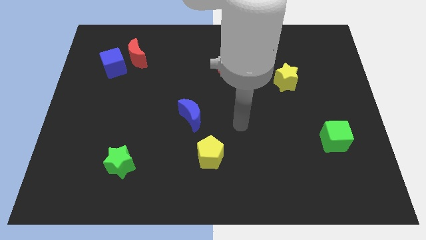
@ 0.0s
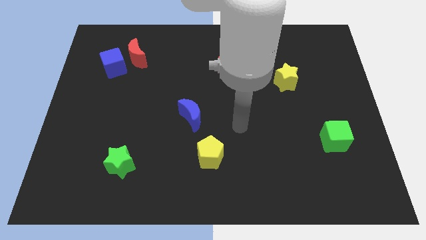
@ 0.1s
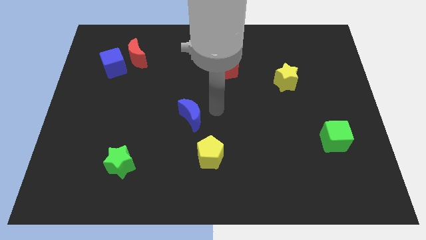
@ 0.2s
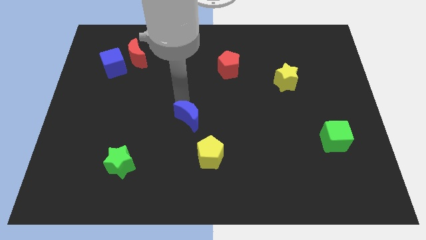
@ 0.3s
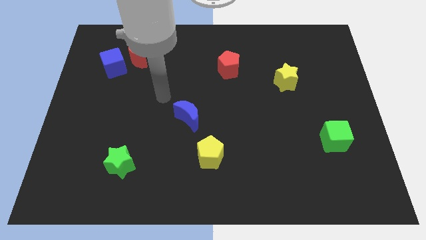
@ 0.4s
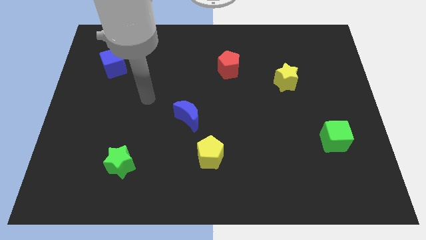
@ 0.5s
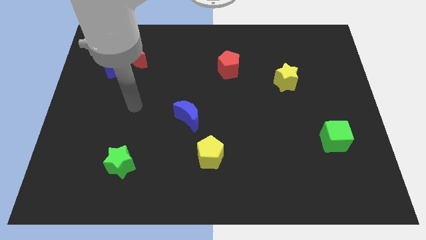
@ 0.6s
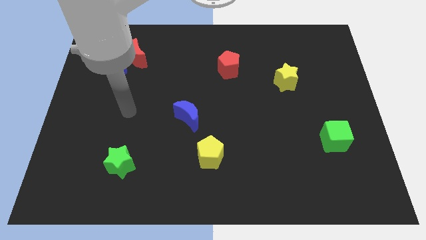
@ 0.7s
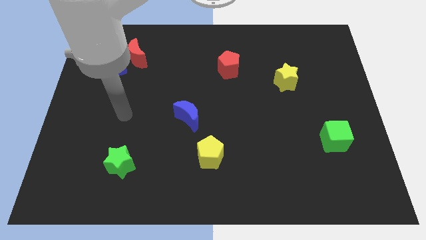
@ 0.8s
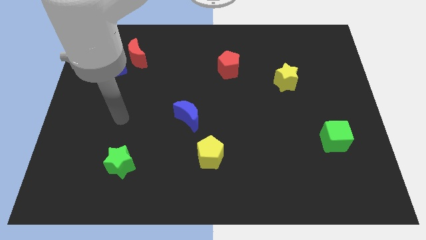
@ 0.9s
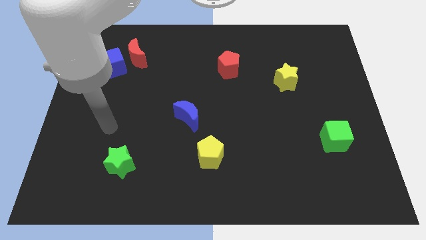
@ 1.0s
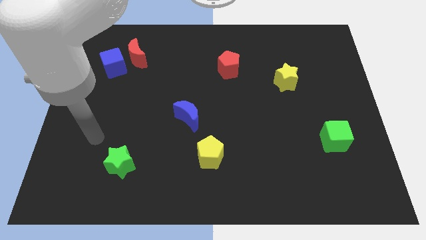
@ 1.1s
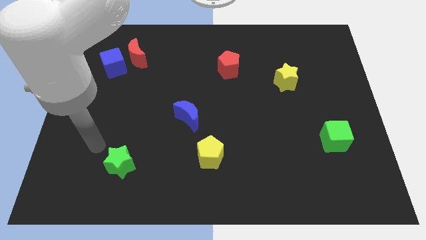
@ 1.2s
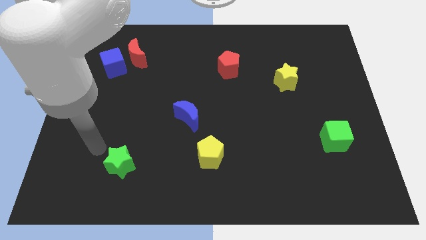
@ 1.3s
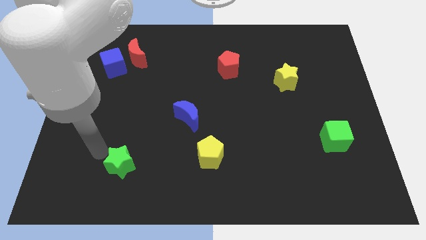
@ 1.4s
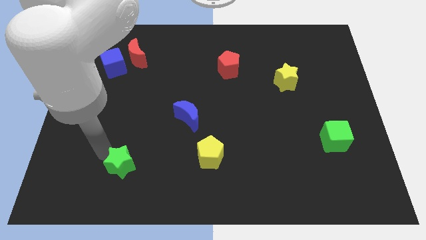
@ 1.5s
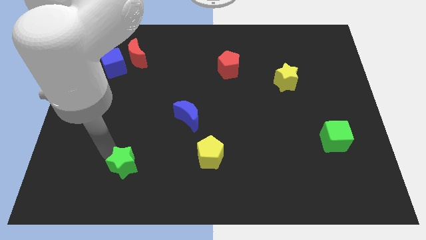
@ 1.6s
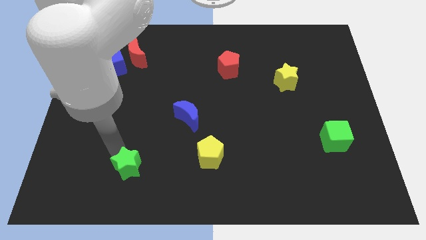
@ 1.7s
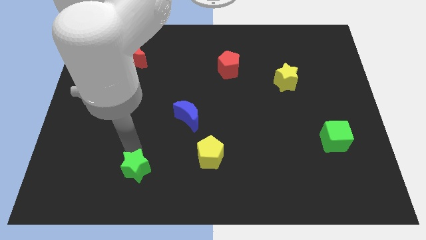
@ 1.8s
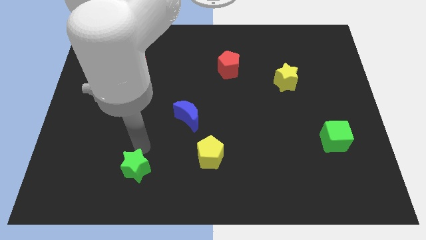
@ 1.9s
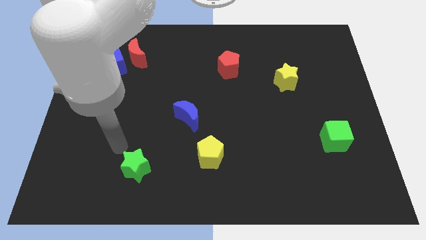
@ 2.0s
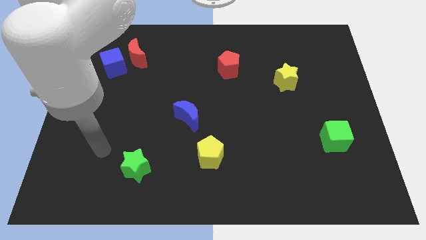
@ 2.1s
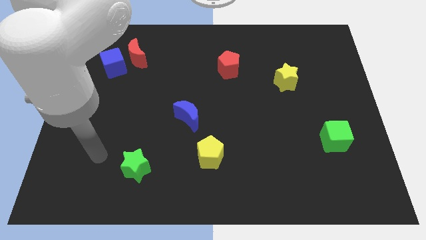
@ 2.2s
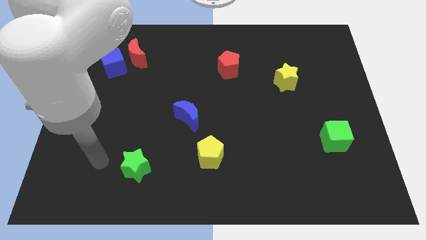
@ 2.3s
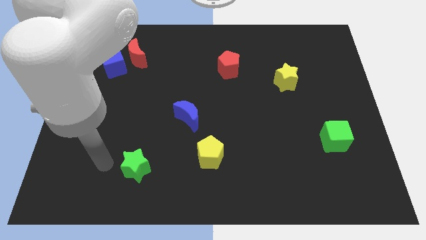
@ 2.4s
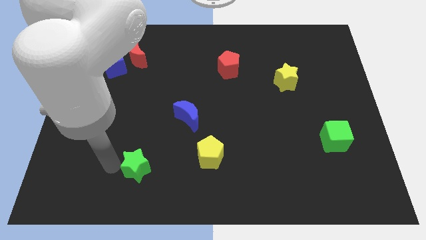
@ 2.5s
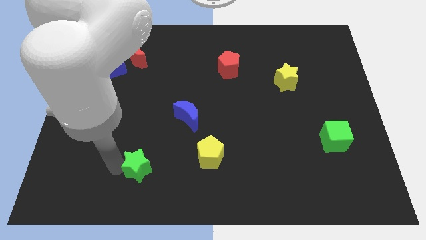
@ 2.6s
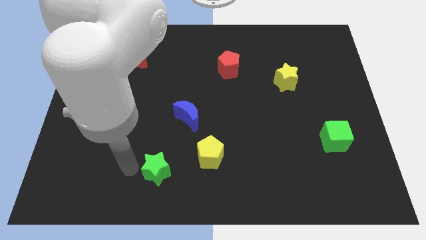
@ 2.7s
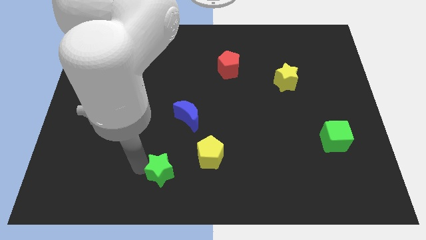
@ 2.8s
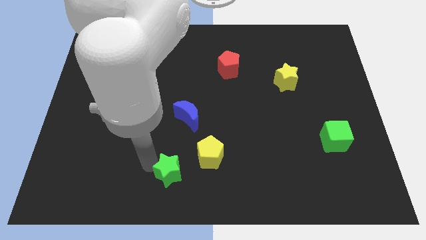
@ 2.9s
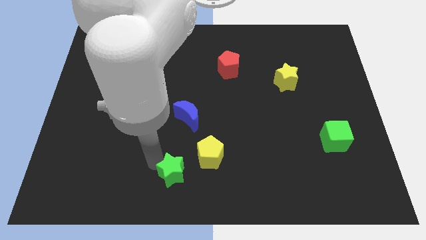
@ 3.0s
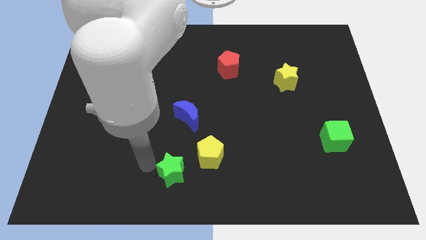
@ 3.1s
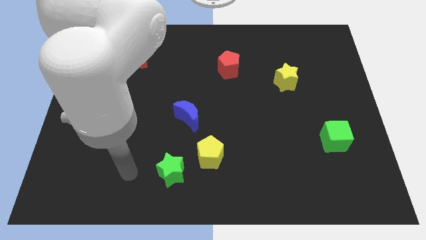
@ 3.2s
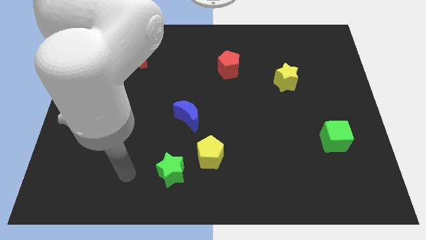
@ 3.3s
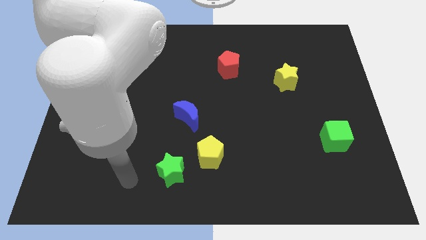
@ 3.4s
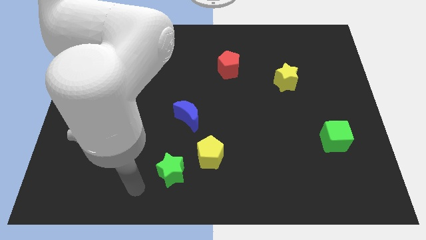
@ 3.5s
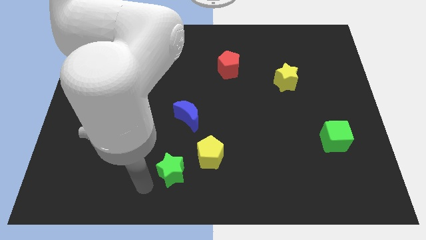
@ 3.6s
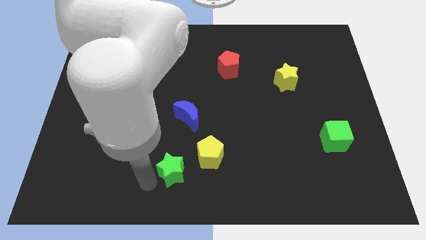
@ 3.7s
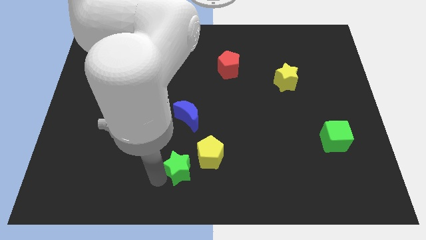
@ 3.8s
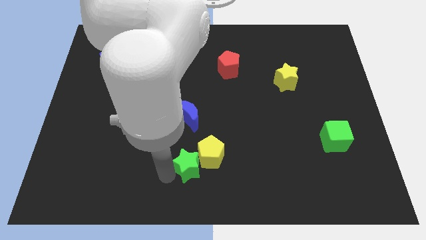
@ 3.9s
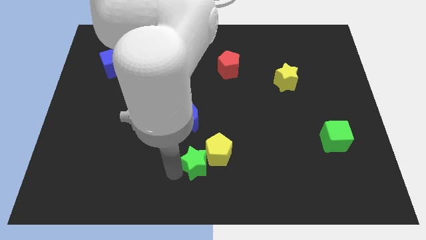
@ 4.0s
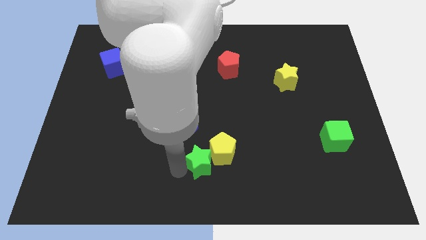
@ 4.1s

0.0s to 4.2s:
push the green star close to the yellow pentagon

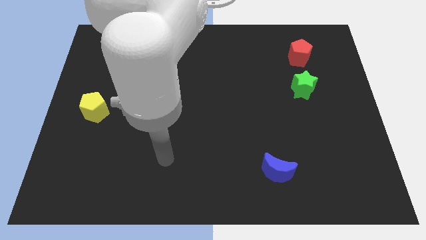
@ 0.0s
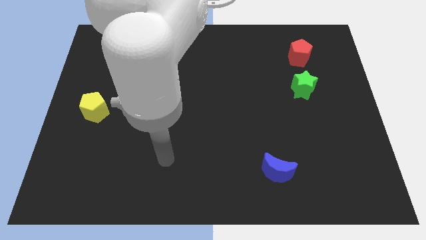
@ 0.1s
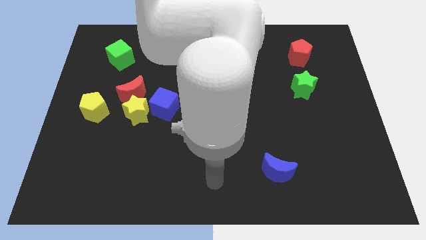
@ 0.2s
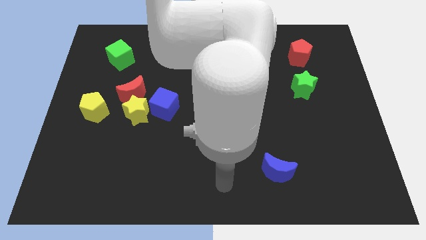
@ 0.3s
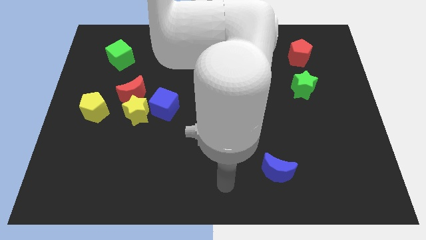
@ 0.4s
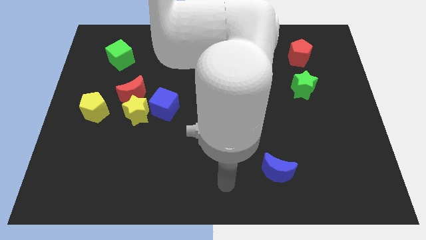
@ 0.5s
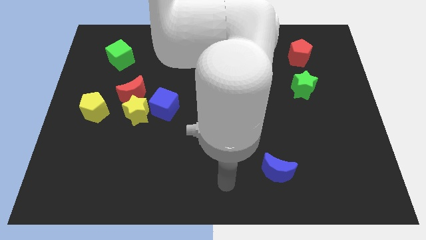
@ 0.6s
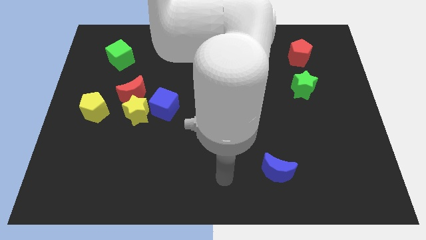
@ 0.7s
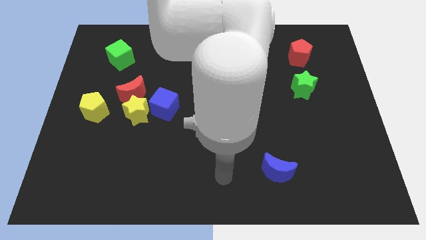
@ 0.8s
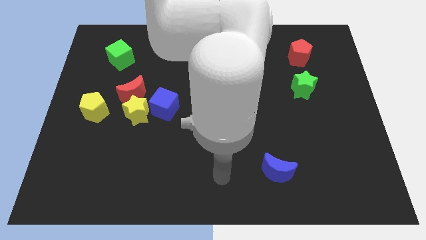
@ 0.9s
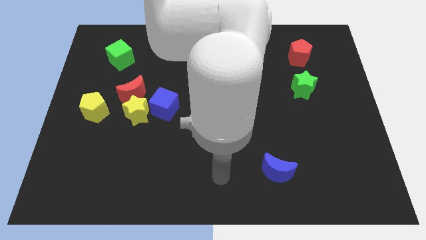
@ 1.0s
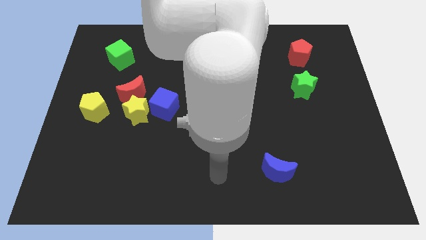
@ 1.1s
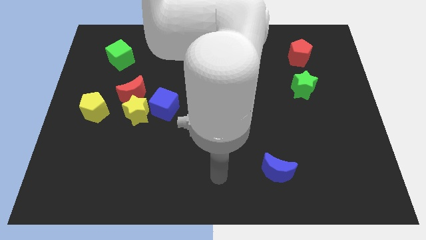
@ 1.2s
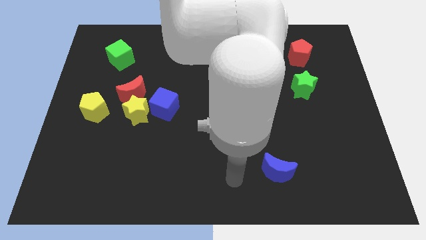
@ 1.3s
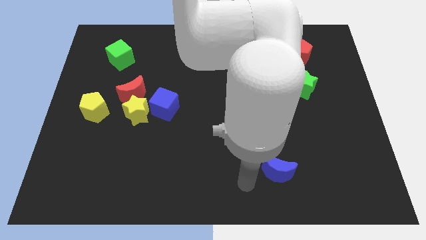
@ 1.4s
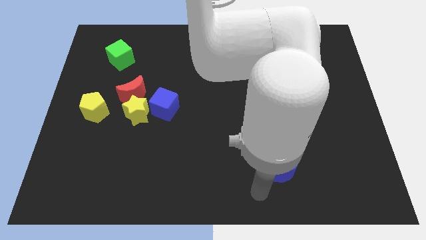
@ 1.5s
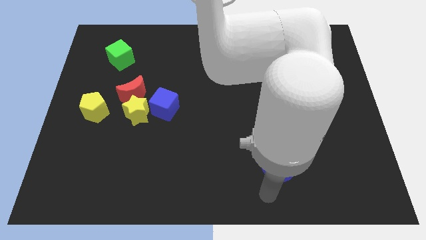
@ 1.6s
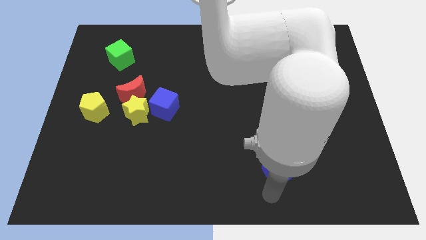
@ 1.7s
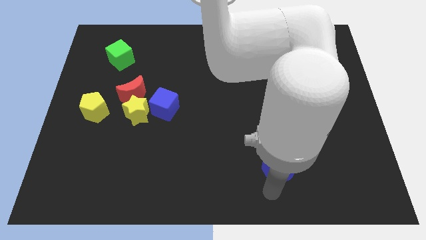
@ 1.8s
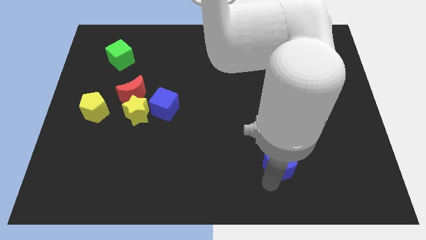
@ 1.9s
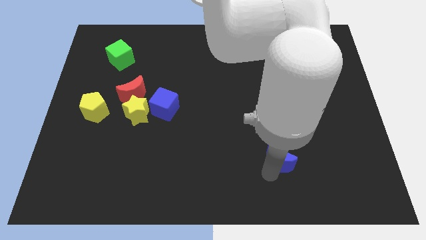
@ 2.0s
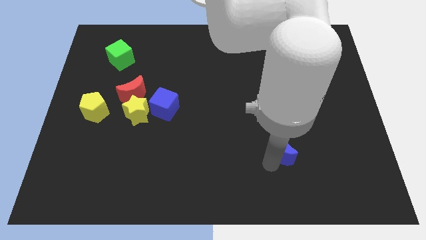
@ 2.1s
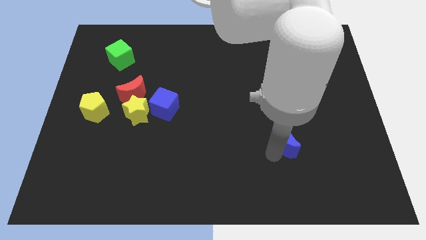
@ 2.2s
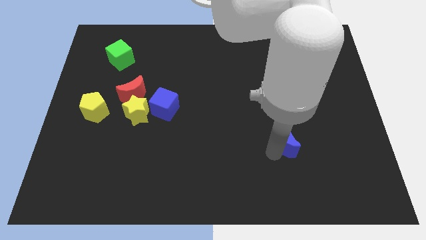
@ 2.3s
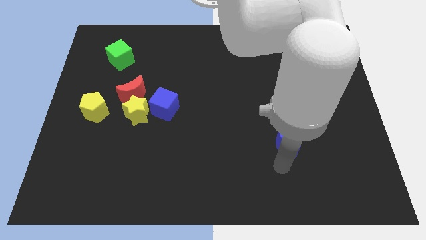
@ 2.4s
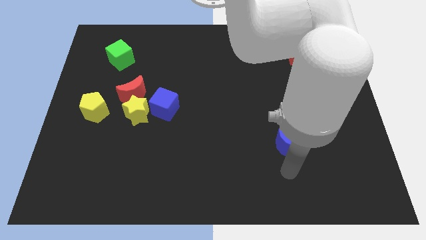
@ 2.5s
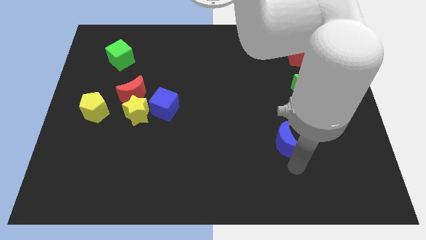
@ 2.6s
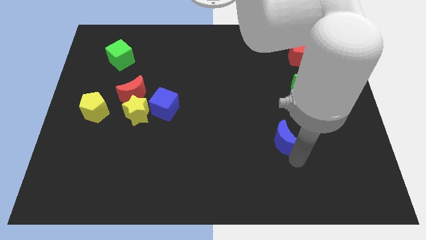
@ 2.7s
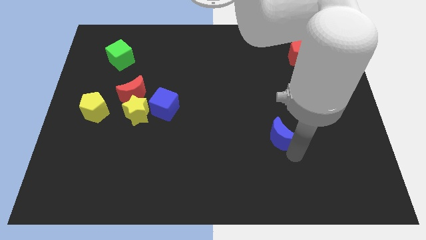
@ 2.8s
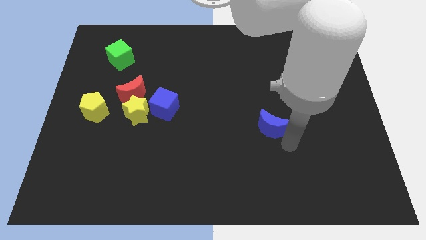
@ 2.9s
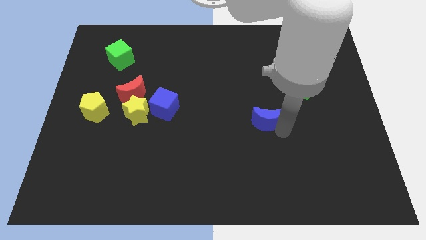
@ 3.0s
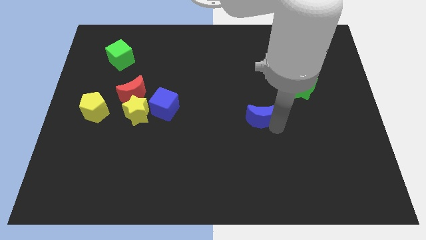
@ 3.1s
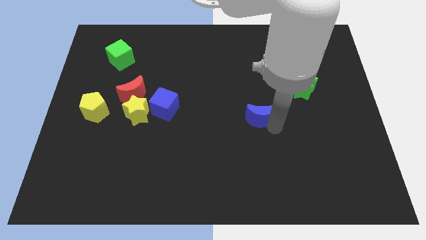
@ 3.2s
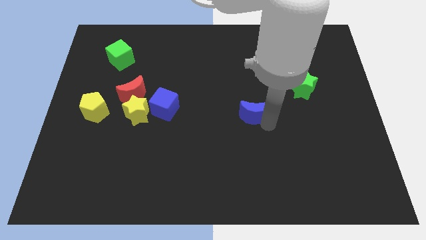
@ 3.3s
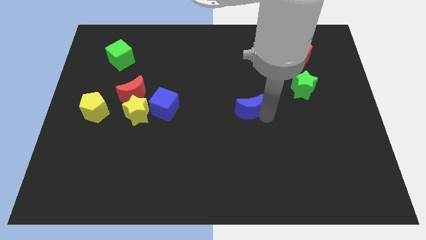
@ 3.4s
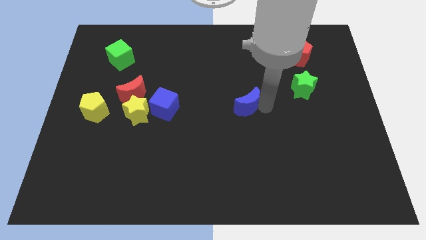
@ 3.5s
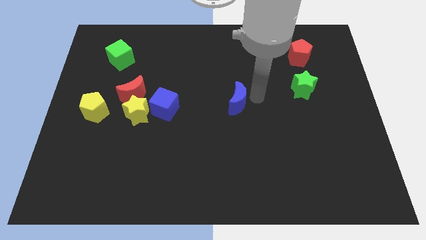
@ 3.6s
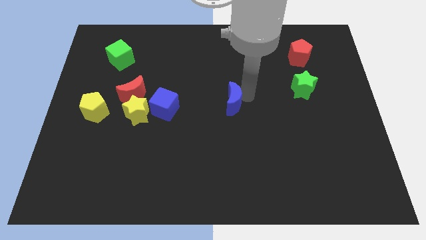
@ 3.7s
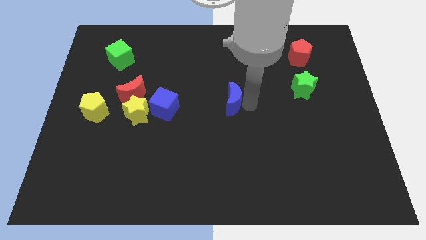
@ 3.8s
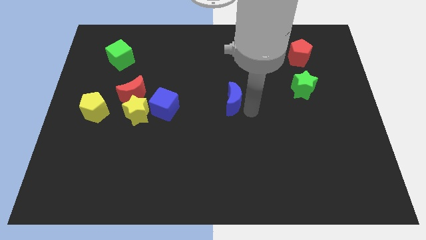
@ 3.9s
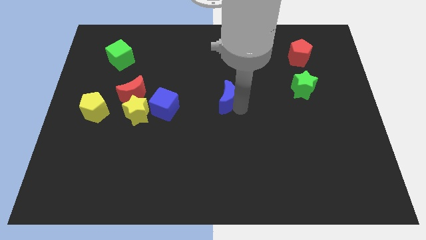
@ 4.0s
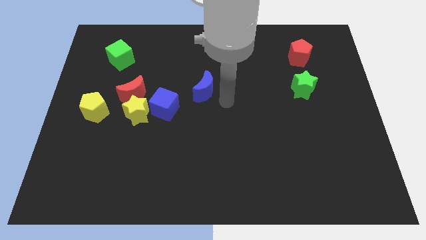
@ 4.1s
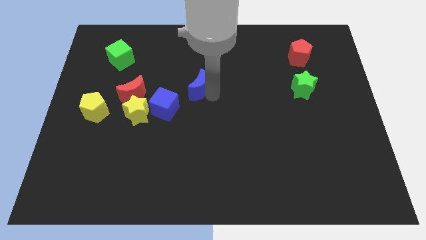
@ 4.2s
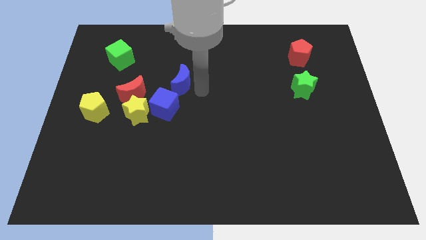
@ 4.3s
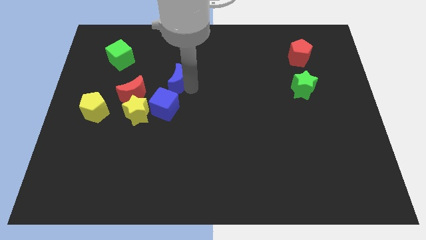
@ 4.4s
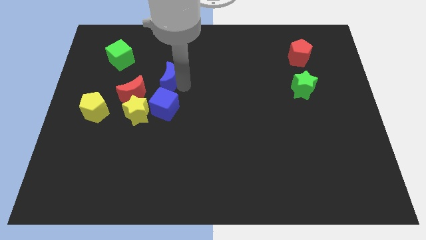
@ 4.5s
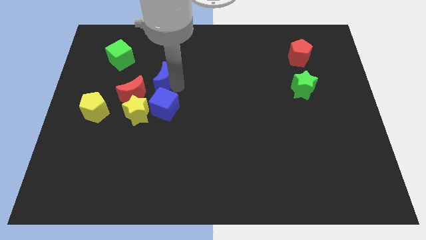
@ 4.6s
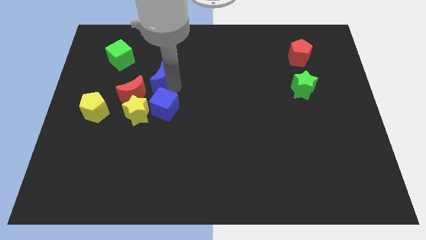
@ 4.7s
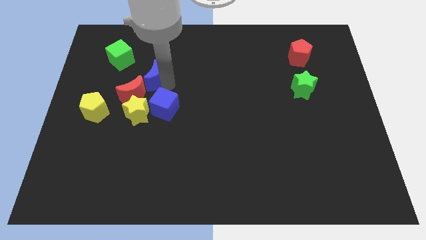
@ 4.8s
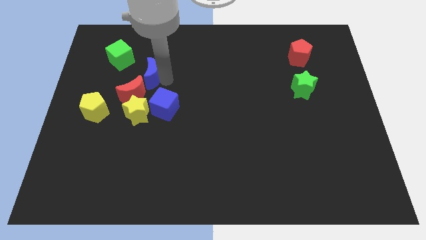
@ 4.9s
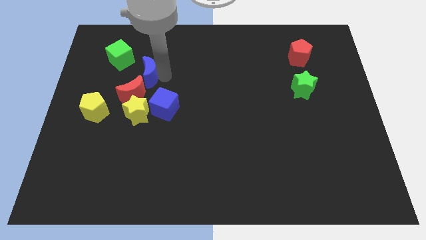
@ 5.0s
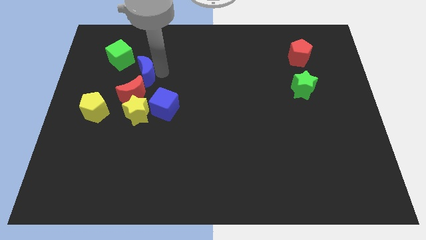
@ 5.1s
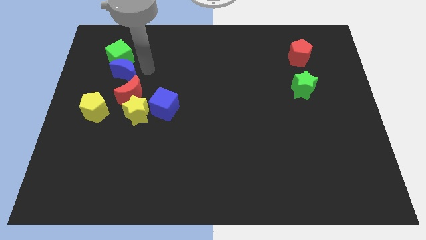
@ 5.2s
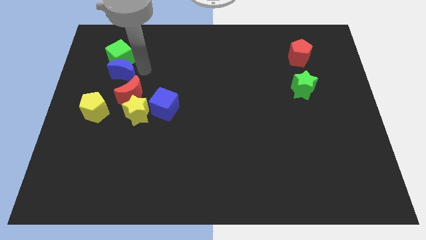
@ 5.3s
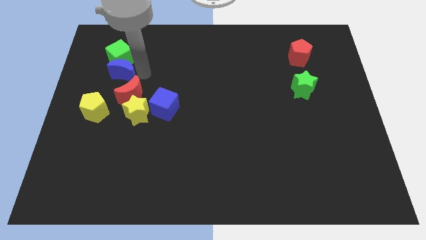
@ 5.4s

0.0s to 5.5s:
slide the blue moon to the green cube
